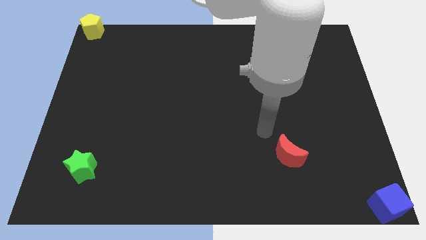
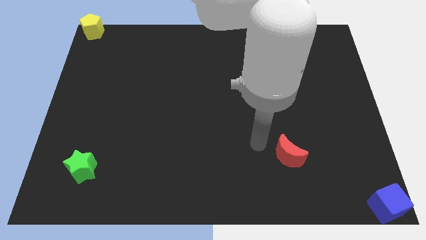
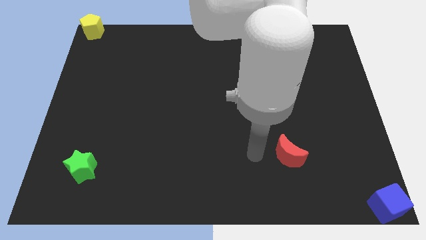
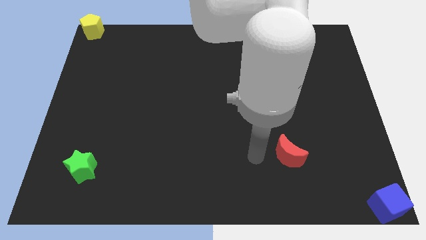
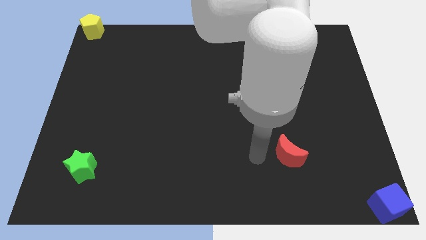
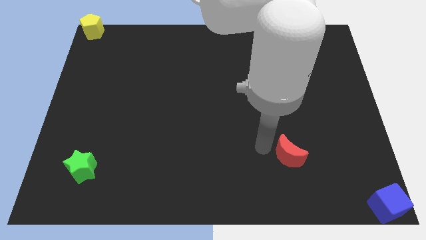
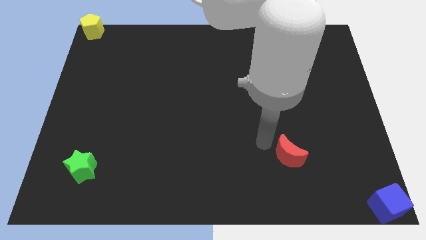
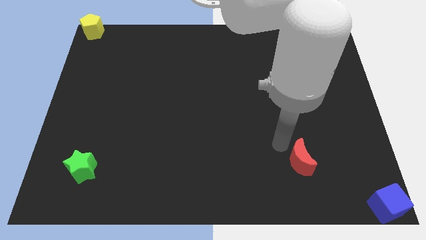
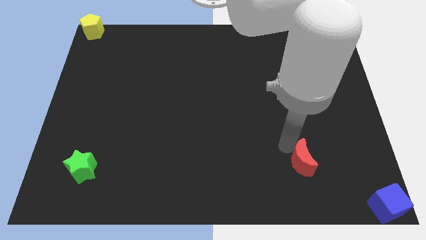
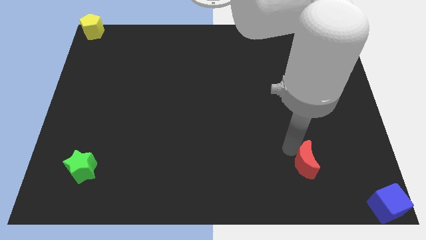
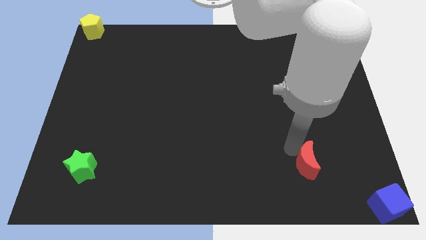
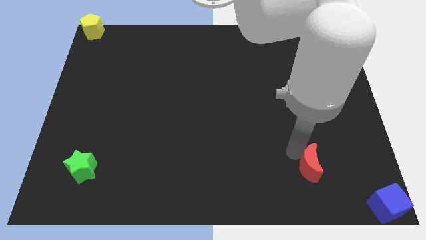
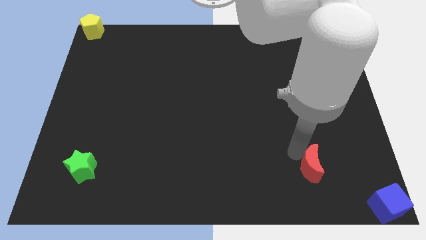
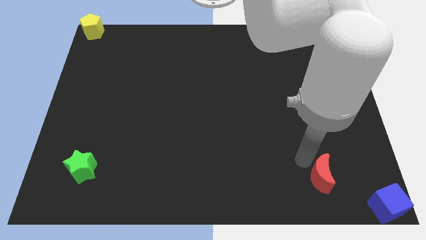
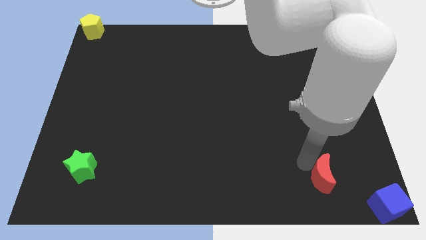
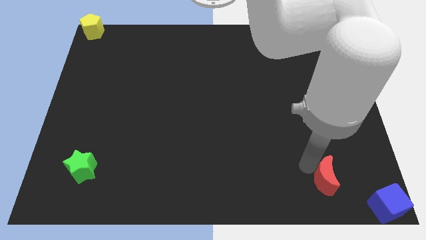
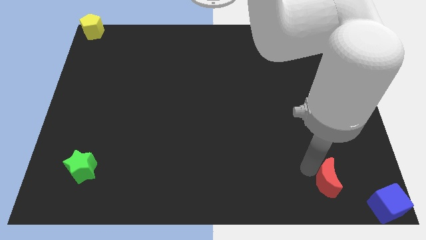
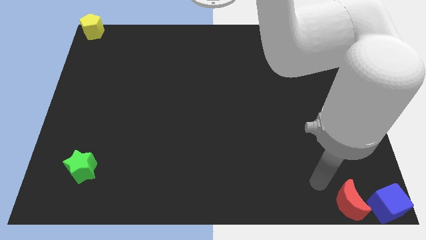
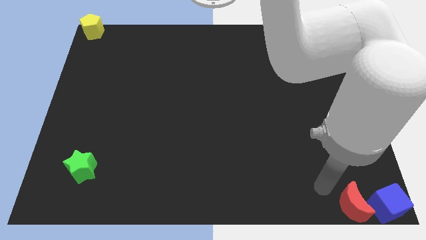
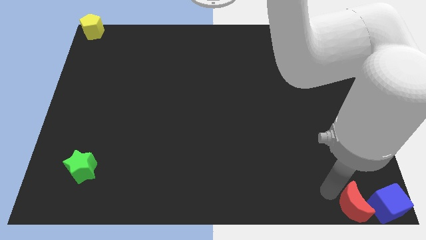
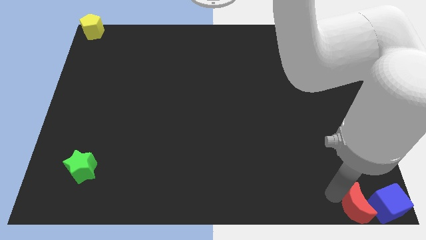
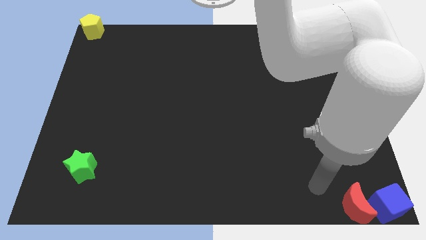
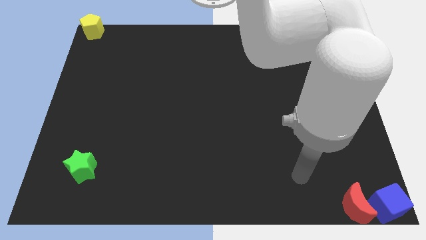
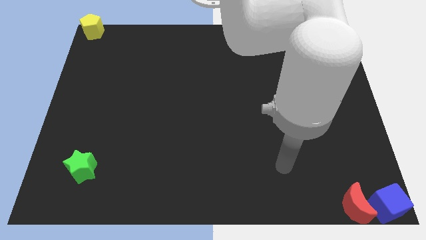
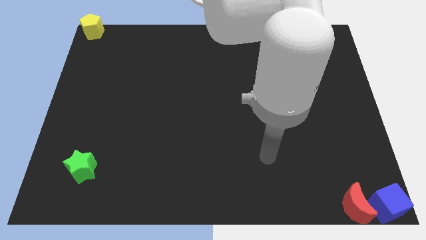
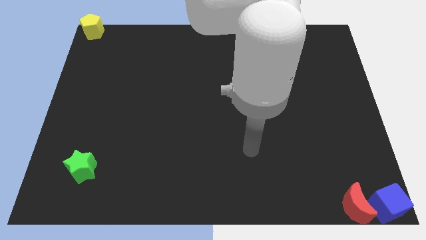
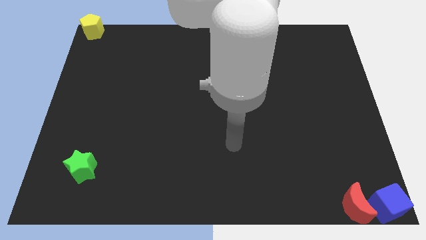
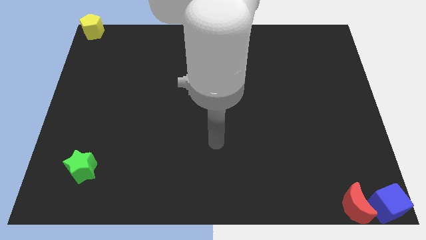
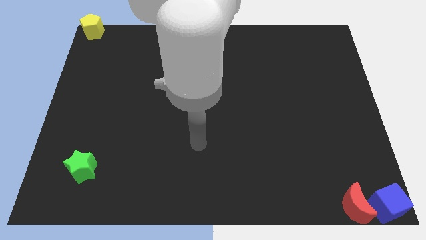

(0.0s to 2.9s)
place the red moon near the blue cube

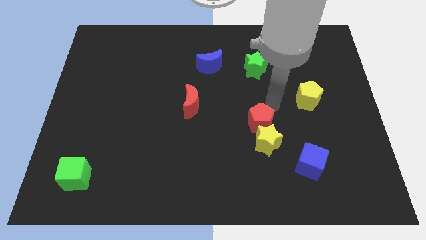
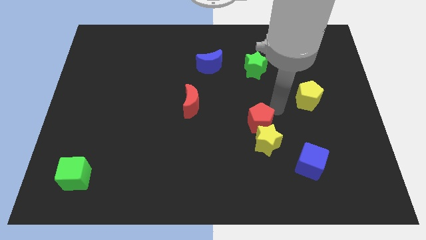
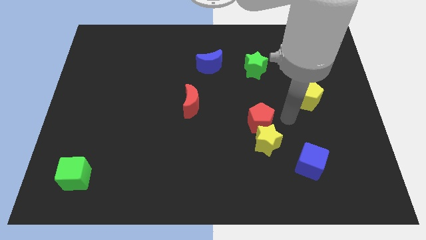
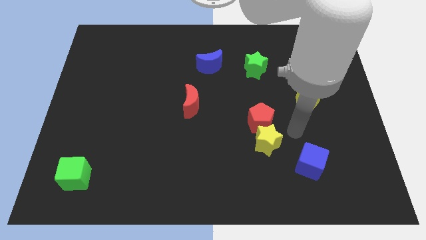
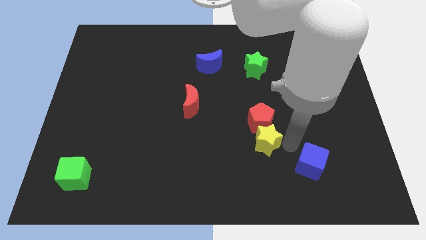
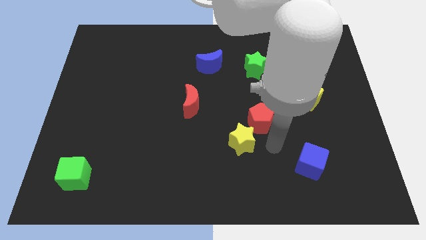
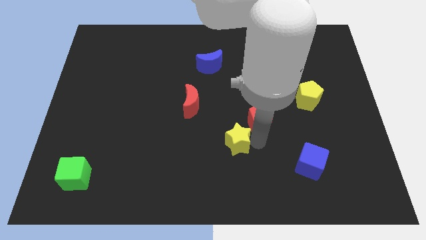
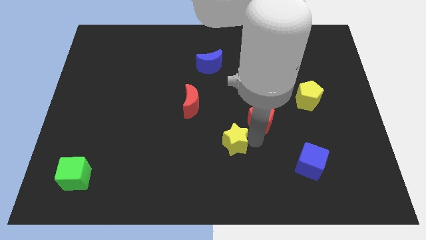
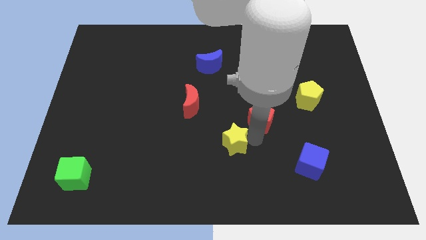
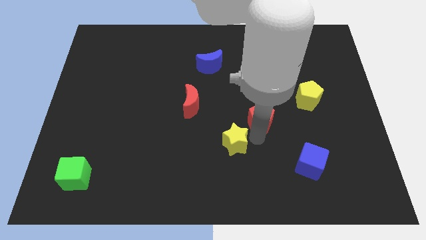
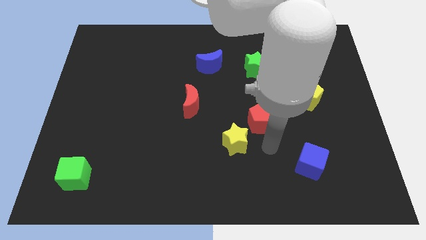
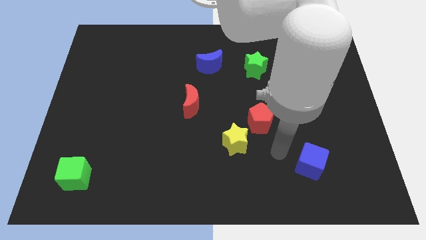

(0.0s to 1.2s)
slide the yellow star bottom right to red moon

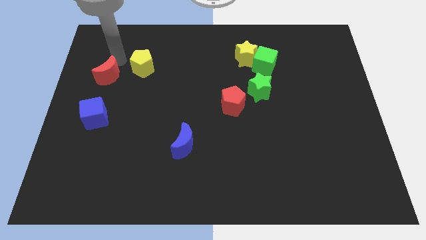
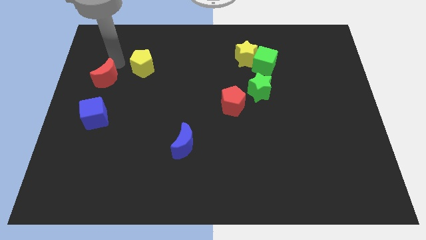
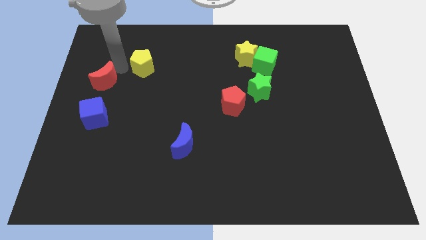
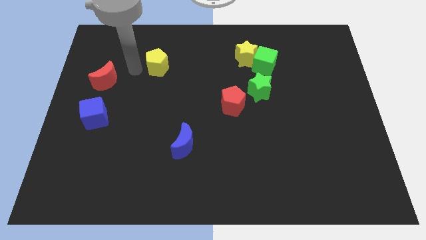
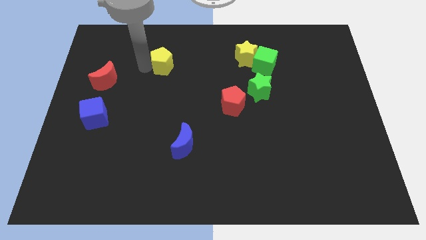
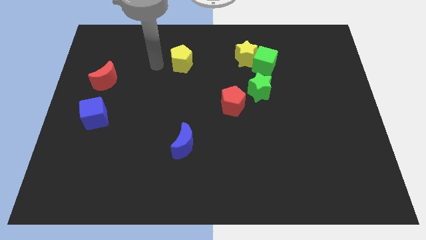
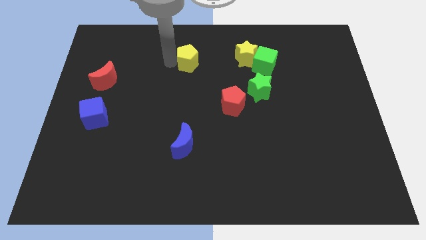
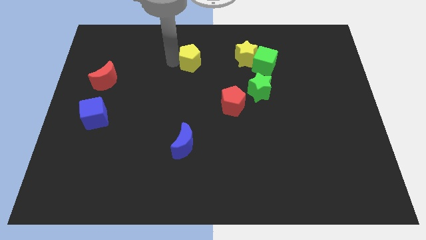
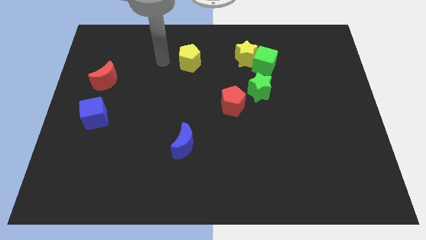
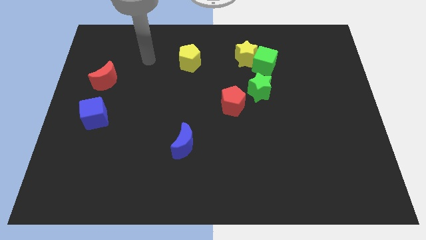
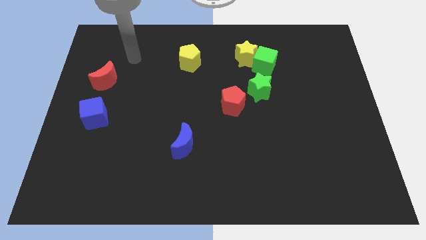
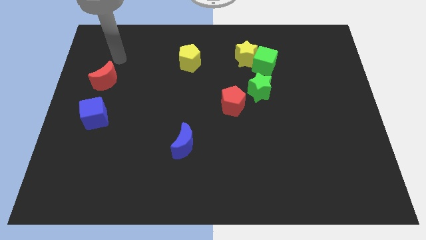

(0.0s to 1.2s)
separate the yellow pentagon from the red moon

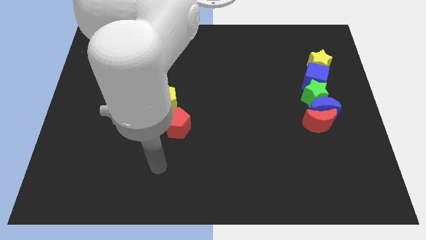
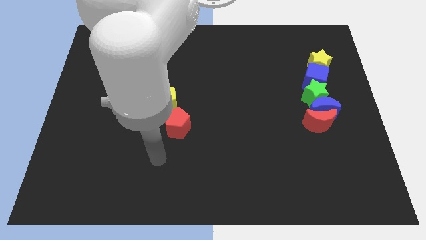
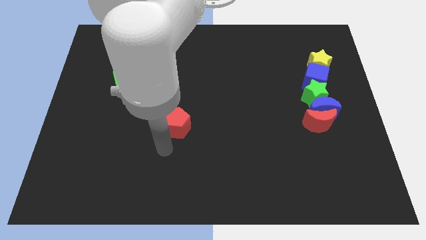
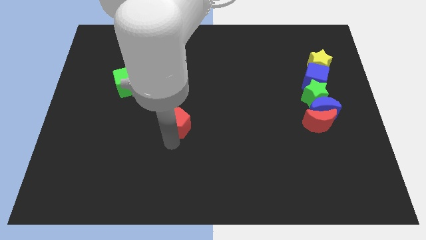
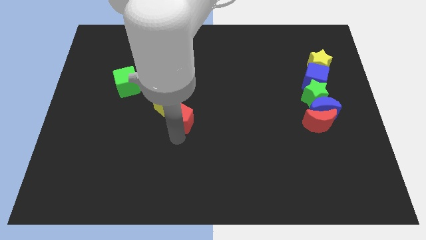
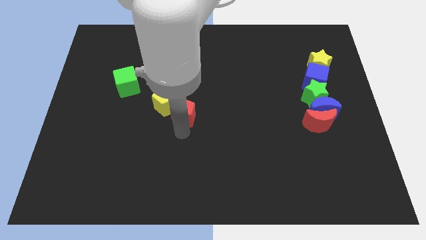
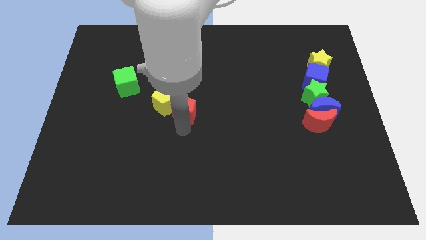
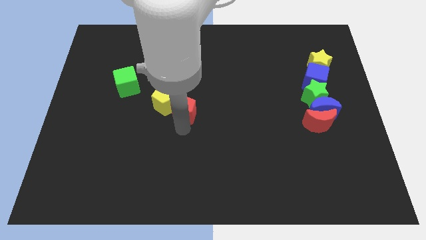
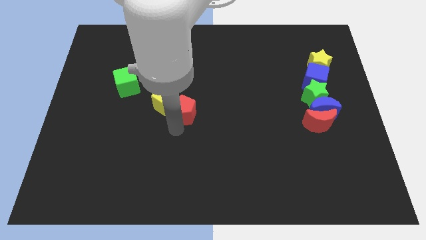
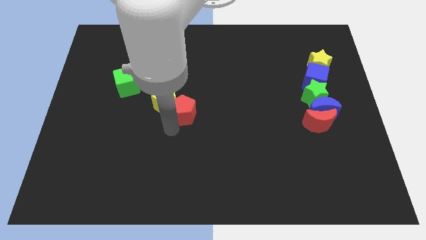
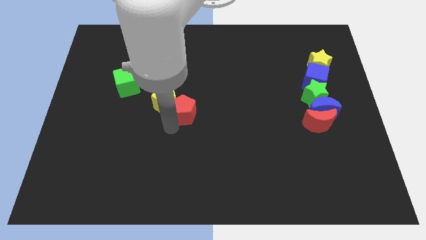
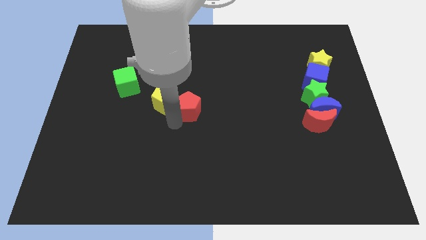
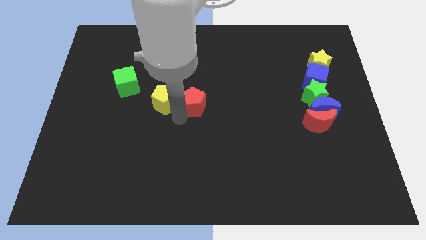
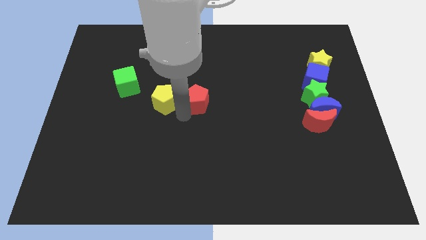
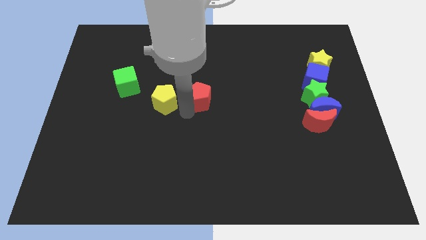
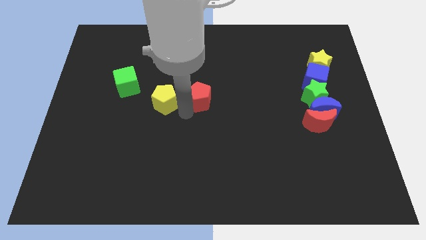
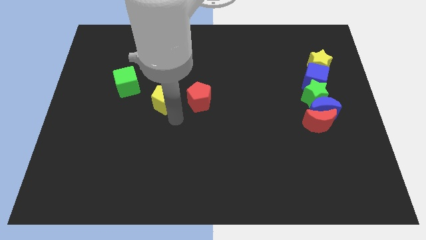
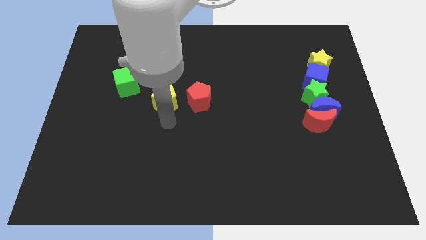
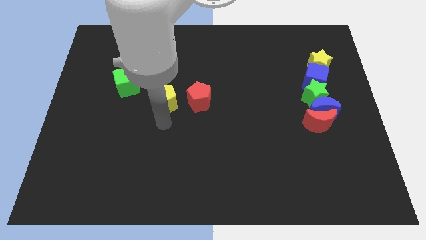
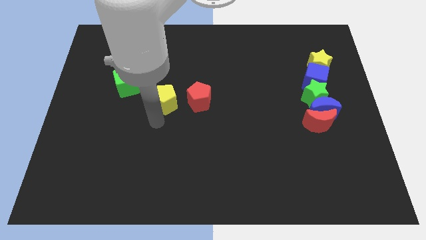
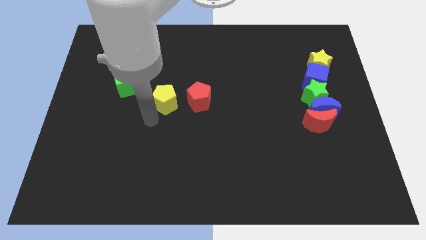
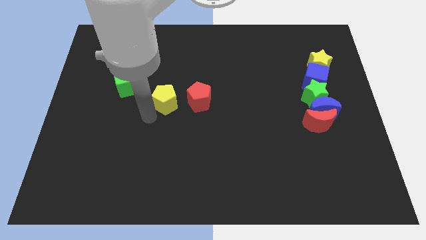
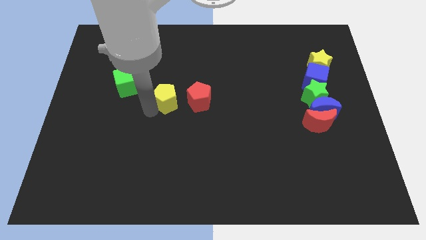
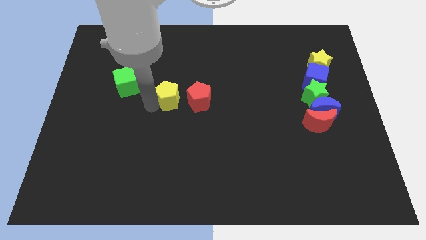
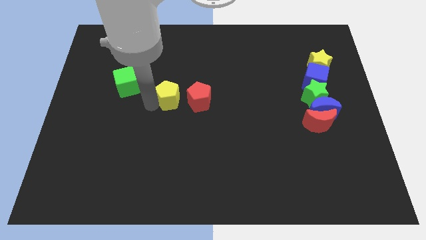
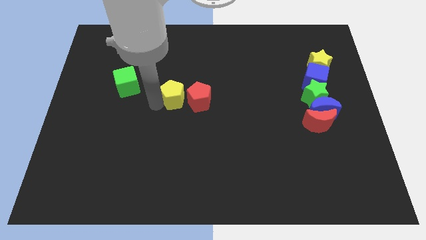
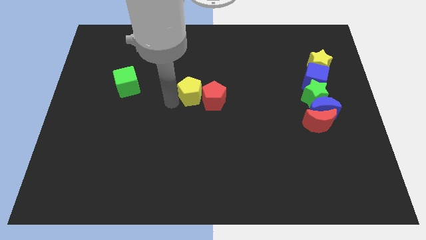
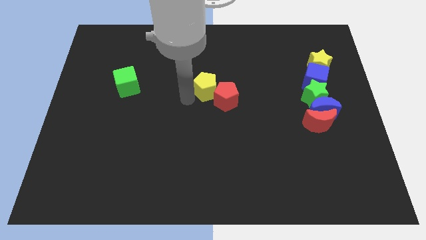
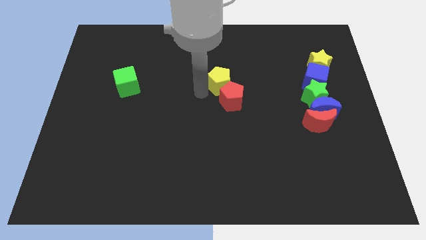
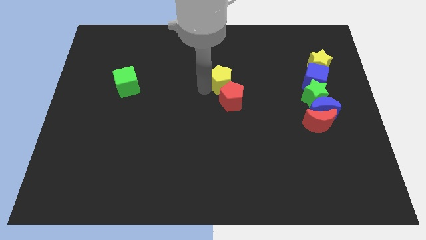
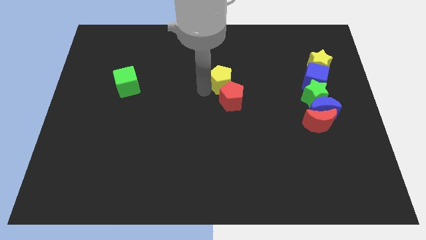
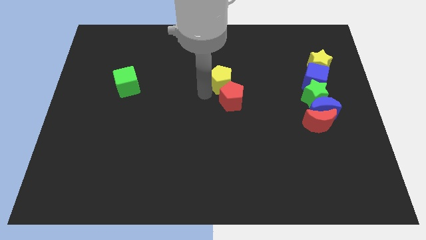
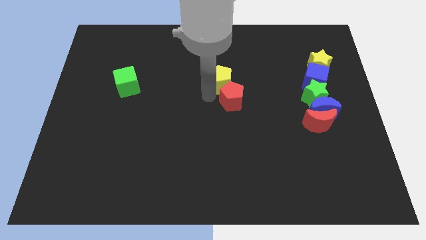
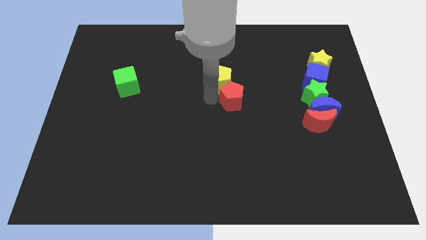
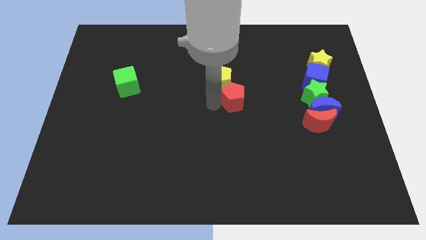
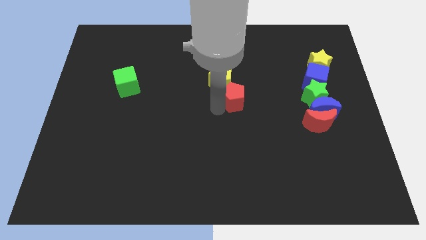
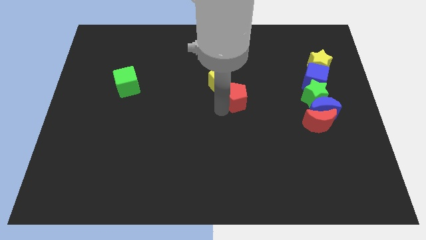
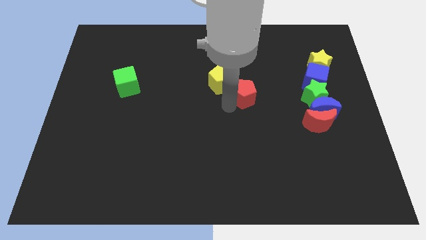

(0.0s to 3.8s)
push the yellow pentagonred pentagon towards the center of the board
